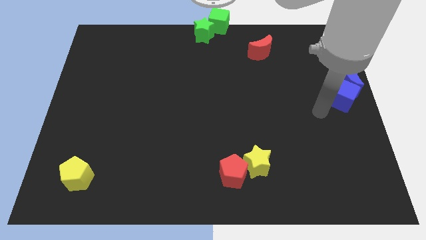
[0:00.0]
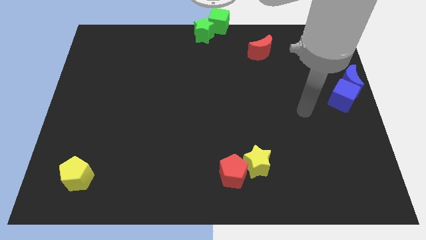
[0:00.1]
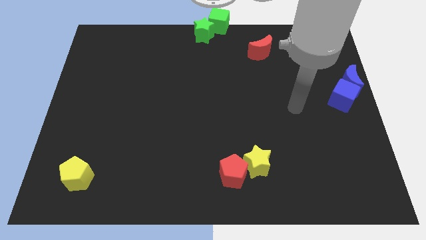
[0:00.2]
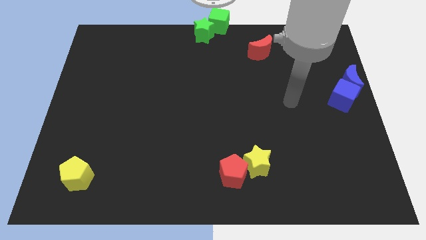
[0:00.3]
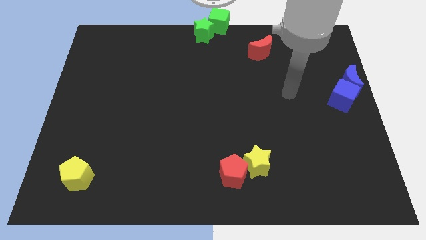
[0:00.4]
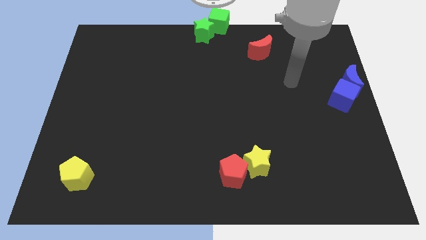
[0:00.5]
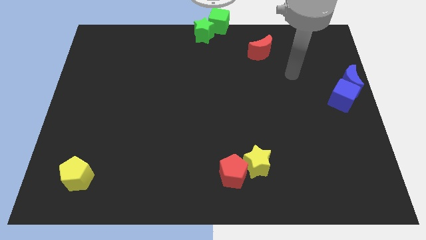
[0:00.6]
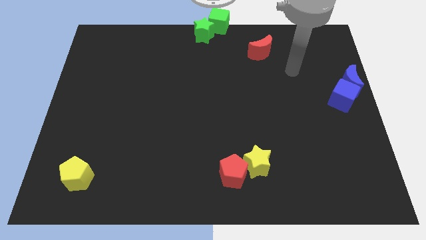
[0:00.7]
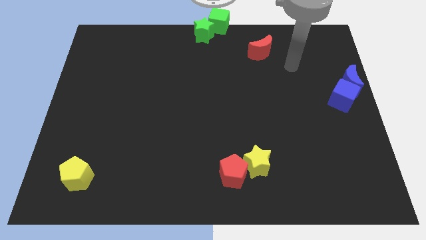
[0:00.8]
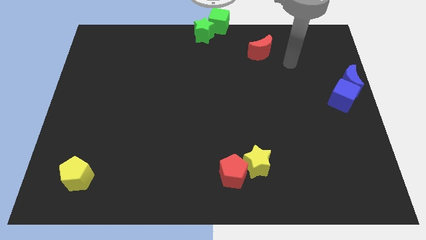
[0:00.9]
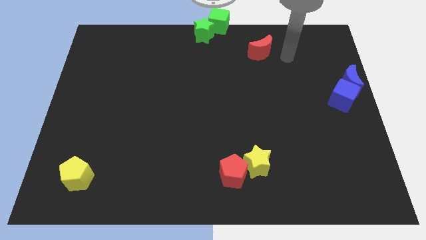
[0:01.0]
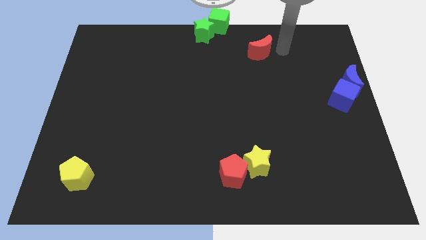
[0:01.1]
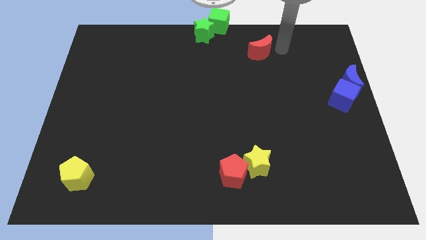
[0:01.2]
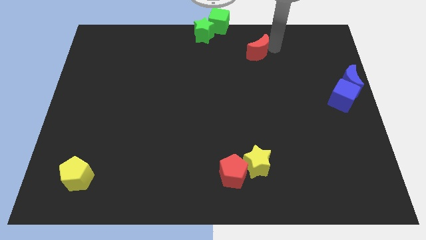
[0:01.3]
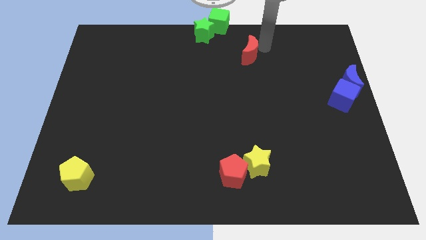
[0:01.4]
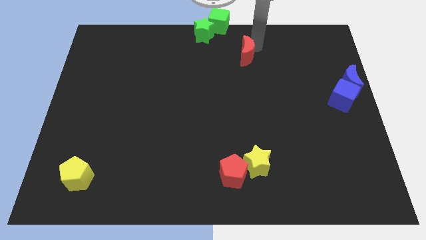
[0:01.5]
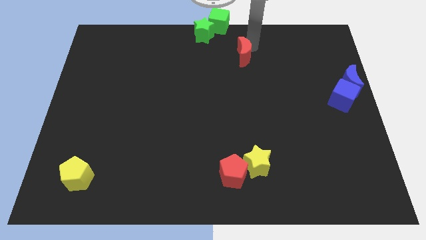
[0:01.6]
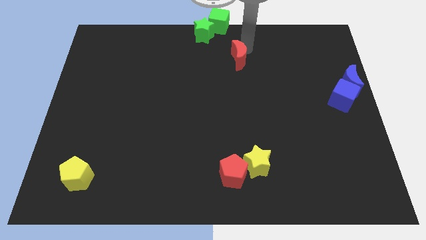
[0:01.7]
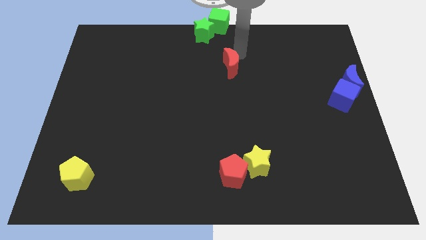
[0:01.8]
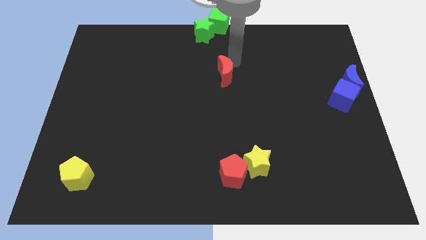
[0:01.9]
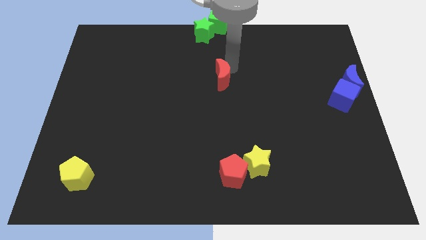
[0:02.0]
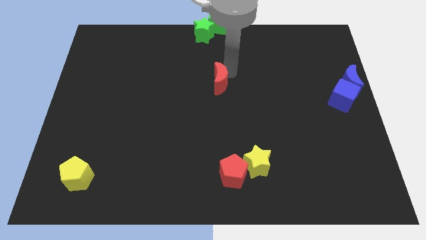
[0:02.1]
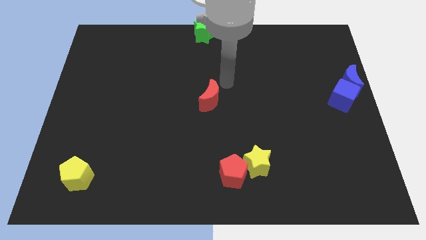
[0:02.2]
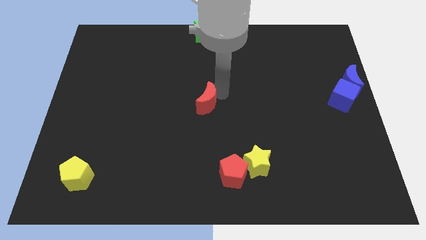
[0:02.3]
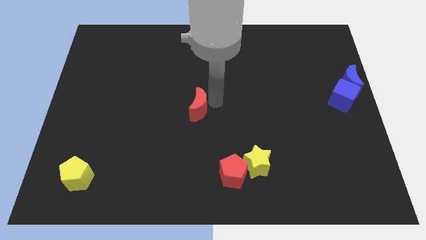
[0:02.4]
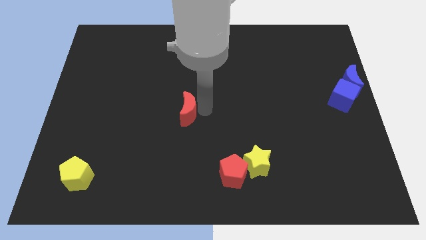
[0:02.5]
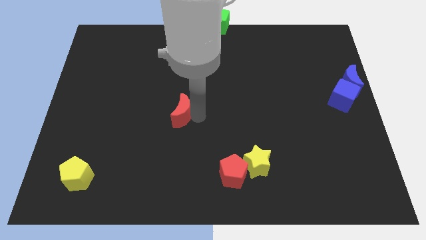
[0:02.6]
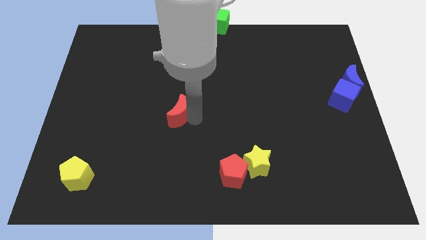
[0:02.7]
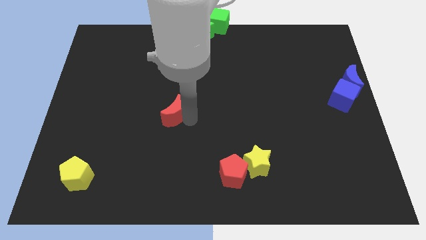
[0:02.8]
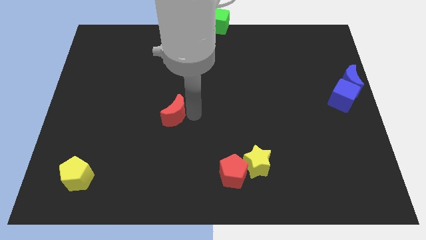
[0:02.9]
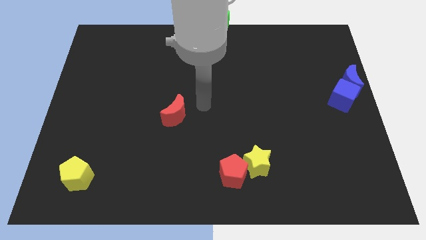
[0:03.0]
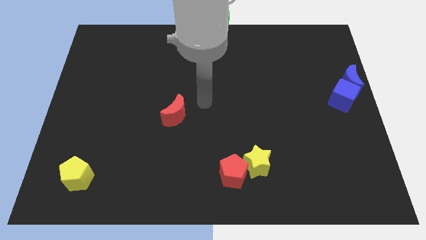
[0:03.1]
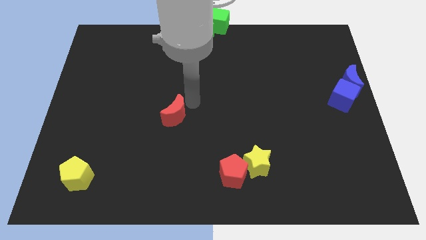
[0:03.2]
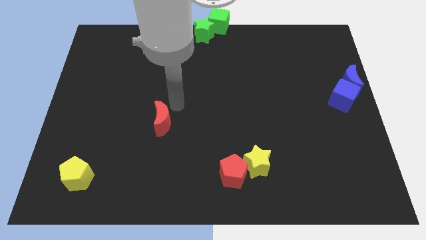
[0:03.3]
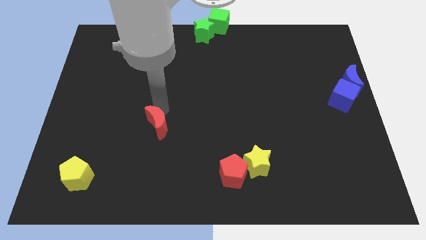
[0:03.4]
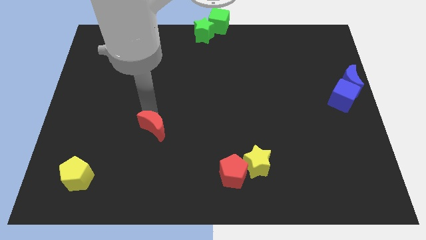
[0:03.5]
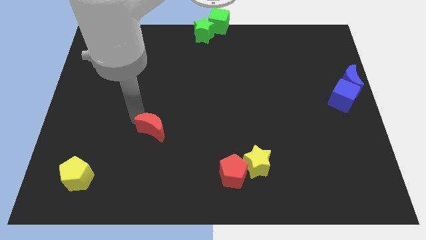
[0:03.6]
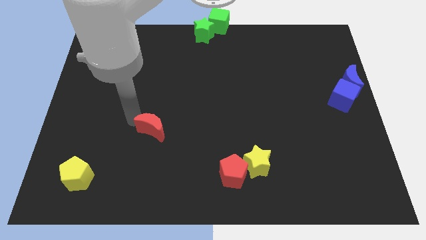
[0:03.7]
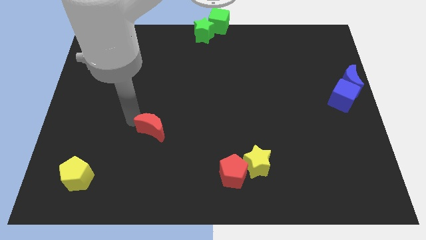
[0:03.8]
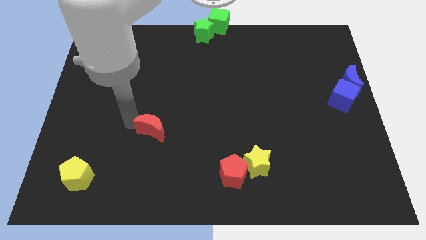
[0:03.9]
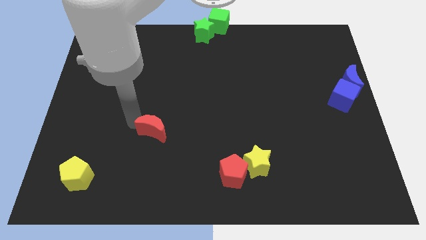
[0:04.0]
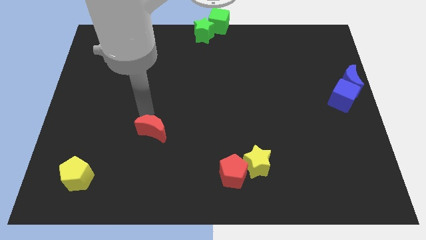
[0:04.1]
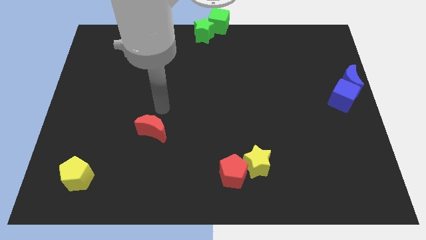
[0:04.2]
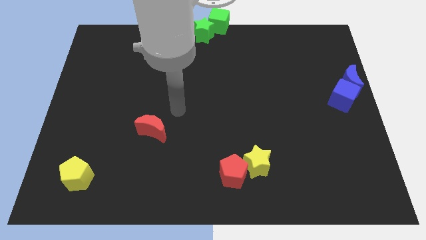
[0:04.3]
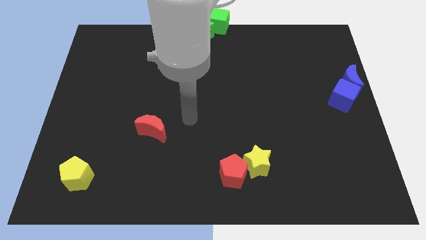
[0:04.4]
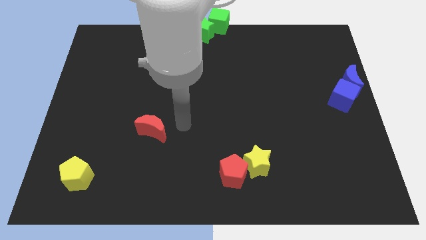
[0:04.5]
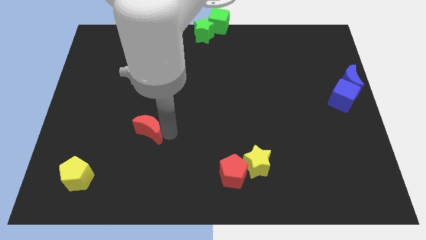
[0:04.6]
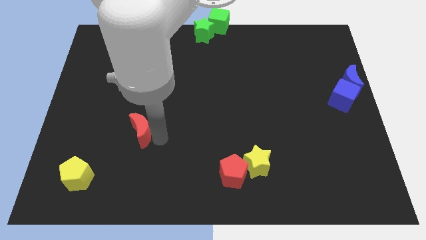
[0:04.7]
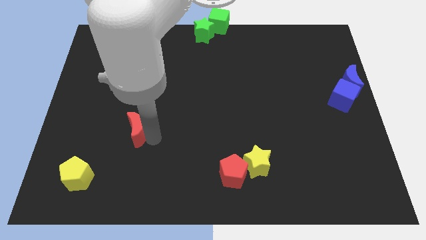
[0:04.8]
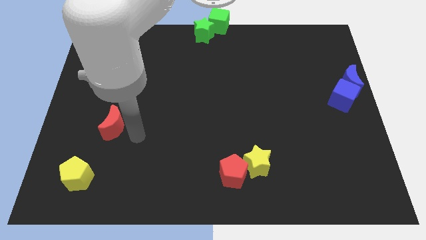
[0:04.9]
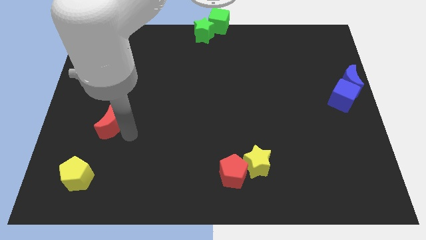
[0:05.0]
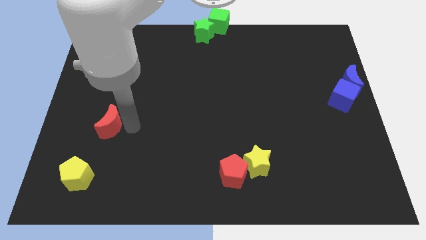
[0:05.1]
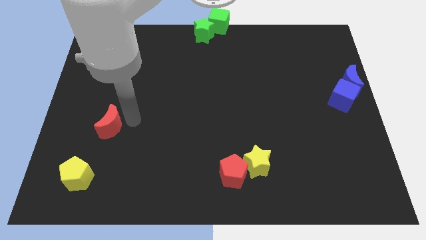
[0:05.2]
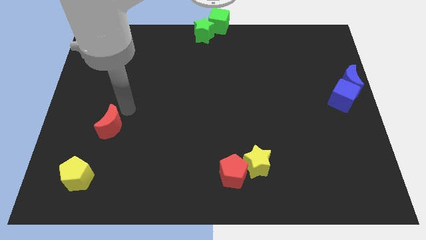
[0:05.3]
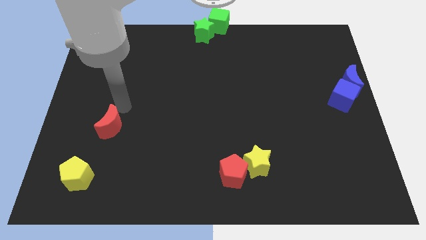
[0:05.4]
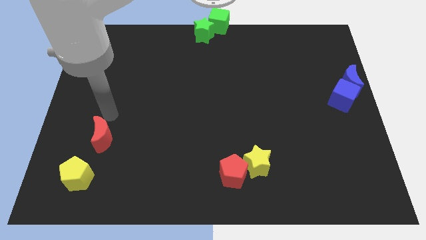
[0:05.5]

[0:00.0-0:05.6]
move the red moon close to the yellow pentagon

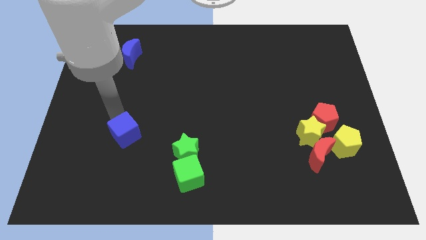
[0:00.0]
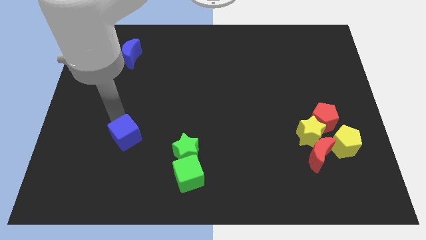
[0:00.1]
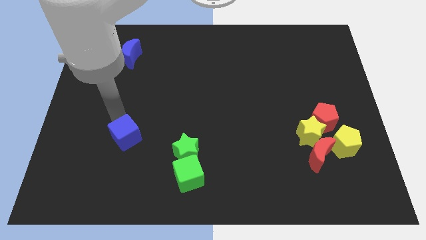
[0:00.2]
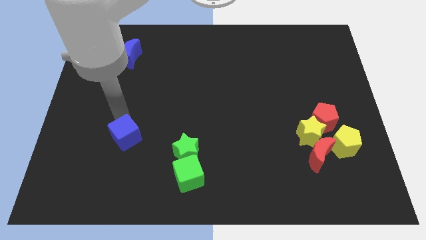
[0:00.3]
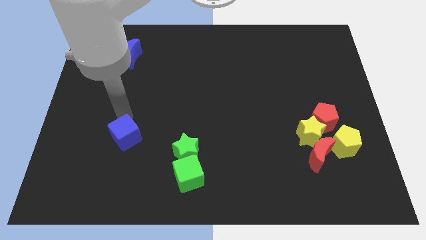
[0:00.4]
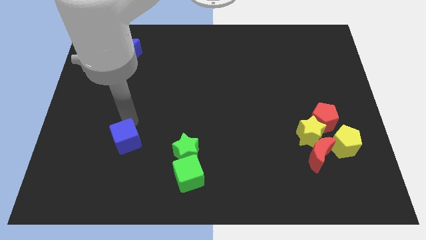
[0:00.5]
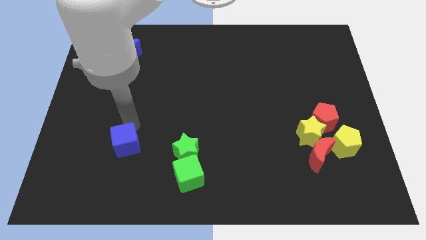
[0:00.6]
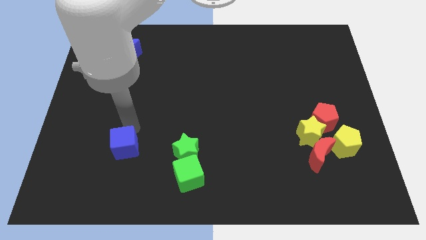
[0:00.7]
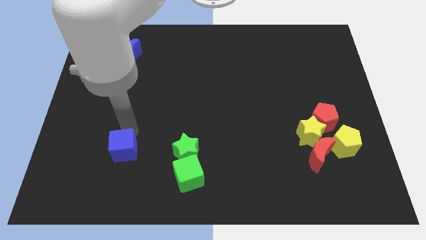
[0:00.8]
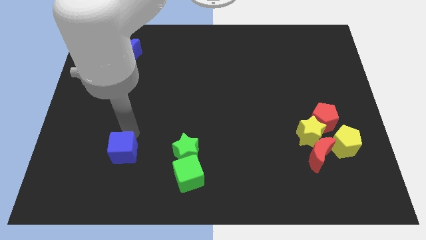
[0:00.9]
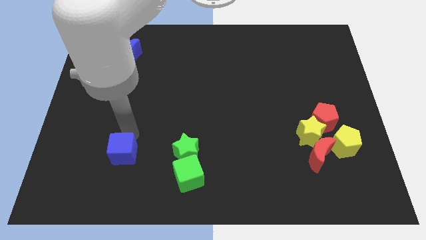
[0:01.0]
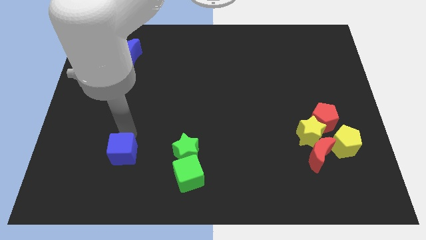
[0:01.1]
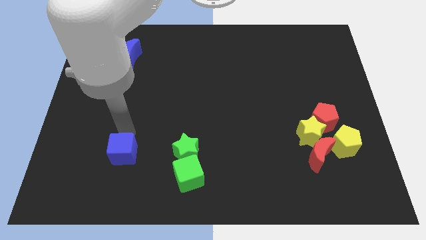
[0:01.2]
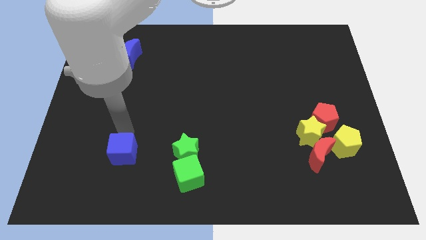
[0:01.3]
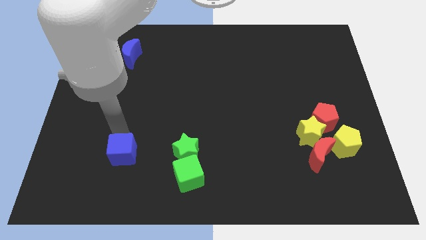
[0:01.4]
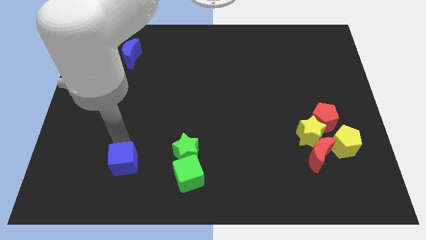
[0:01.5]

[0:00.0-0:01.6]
put the blue cube parallel left to the green star

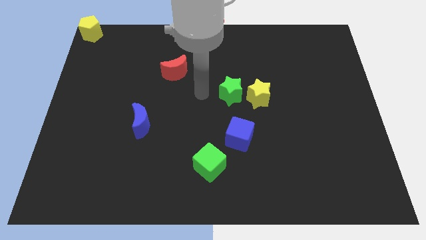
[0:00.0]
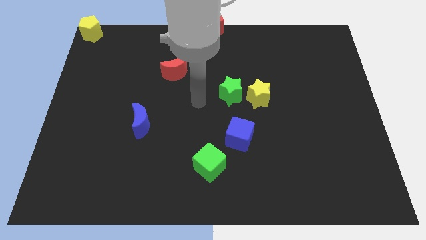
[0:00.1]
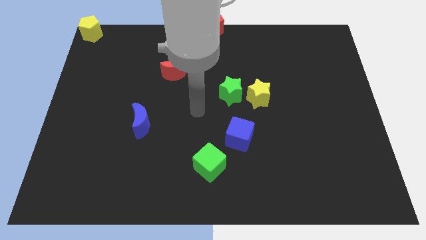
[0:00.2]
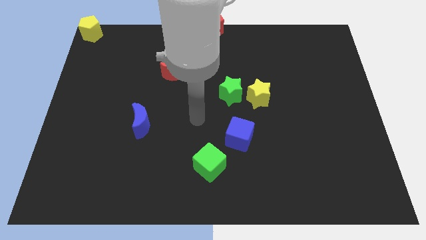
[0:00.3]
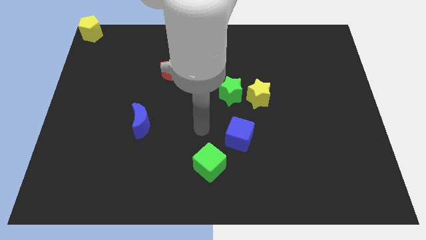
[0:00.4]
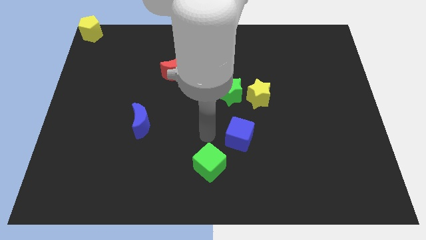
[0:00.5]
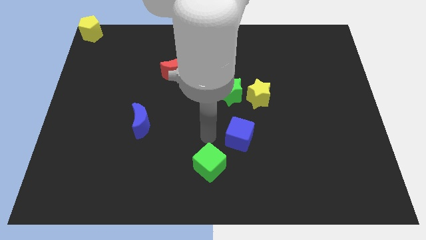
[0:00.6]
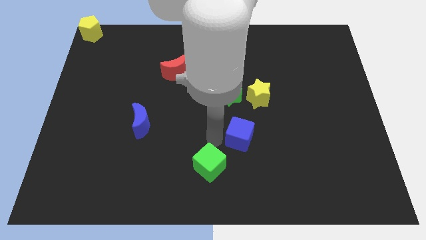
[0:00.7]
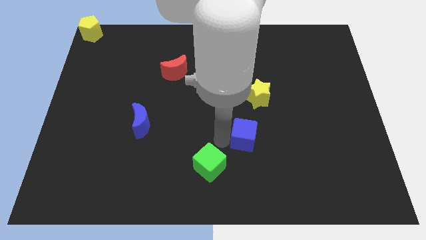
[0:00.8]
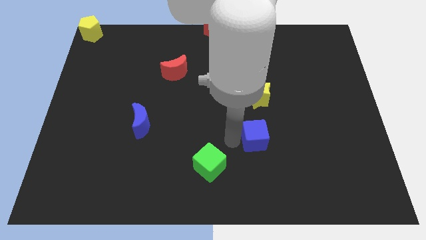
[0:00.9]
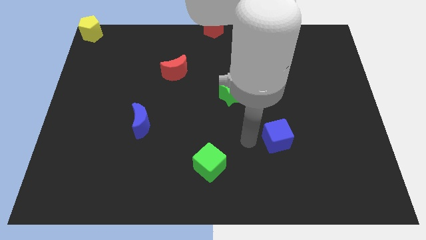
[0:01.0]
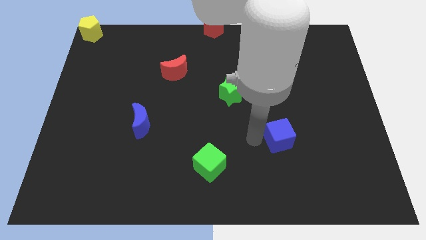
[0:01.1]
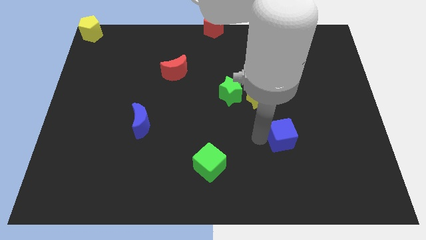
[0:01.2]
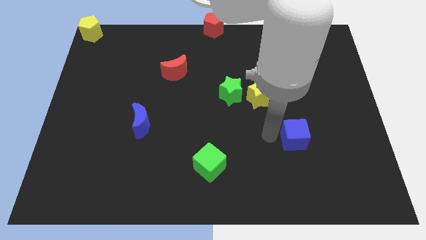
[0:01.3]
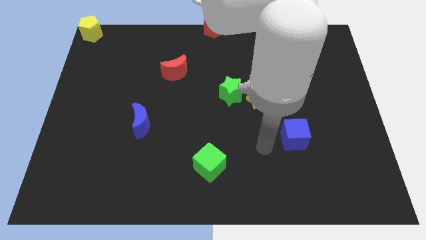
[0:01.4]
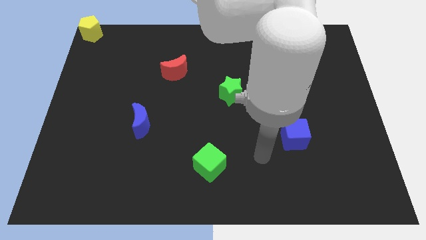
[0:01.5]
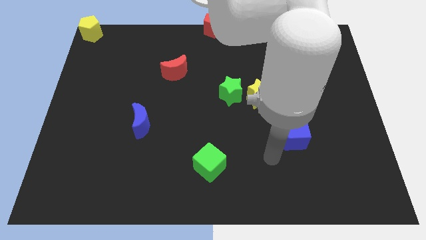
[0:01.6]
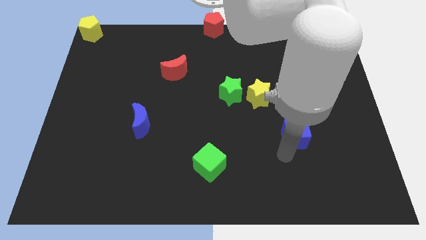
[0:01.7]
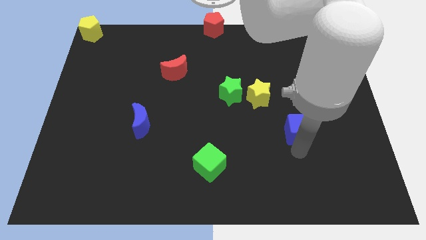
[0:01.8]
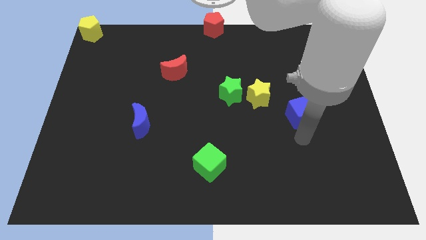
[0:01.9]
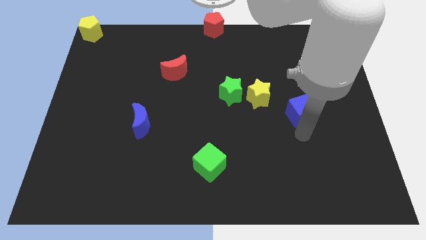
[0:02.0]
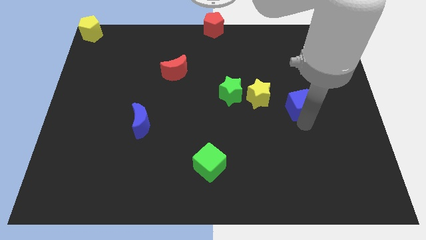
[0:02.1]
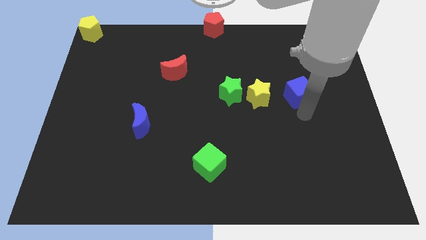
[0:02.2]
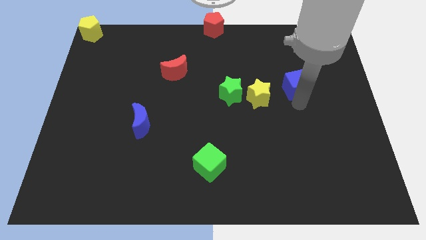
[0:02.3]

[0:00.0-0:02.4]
place blue cube to the right of yellow star
